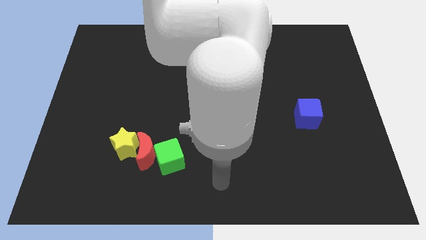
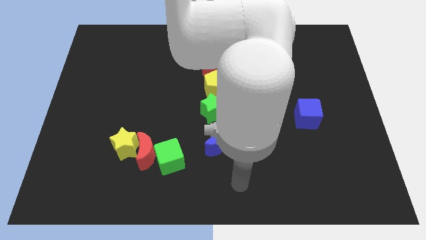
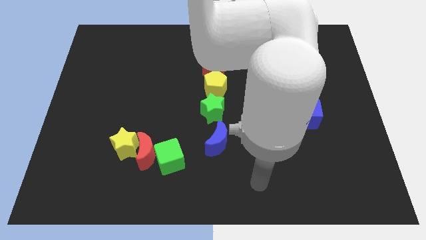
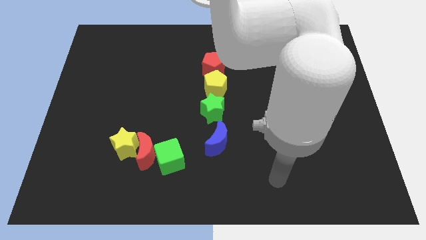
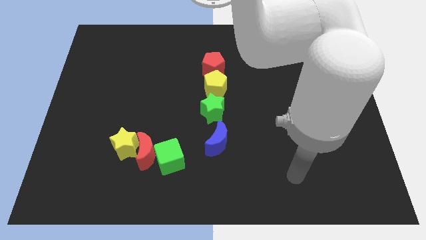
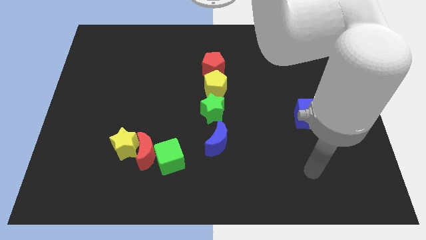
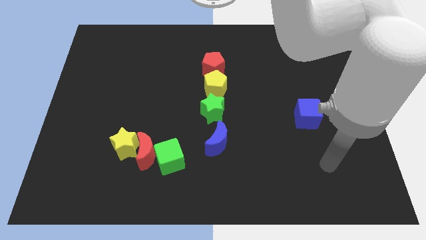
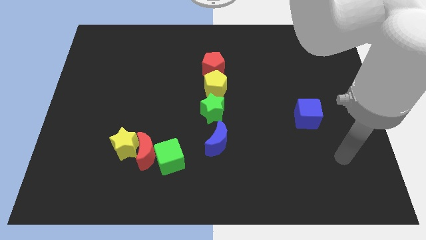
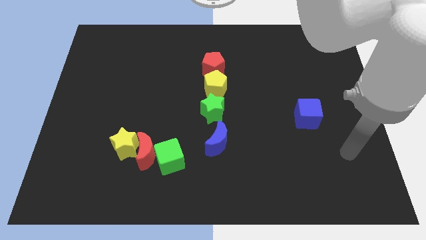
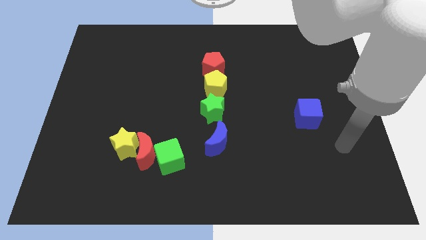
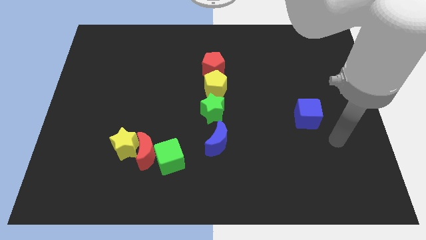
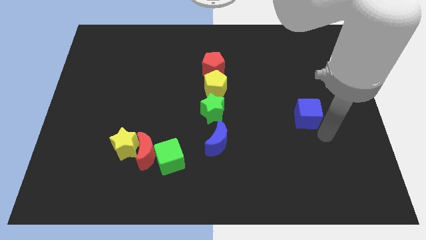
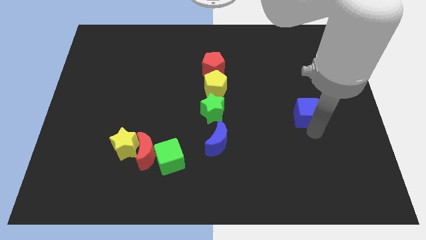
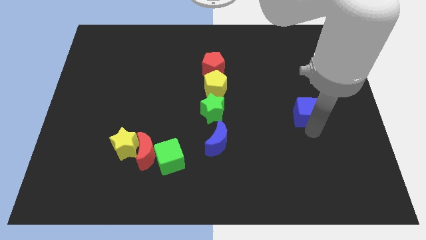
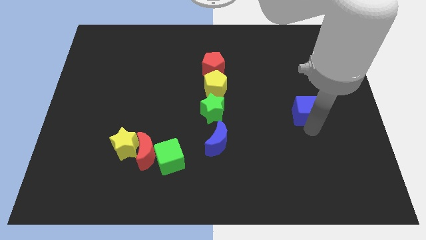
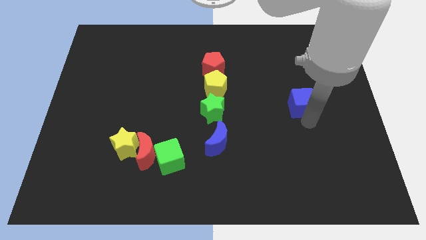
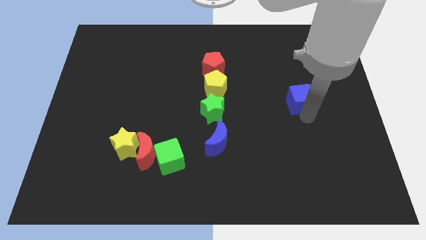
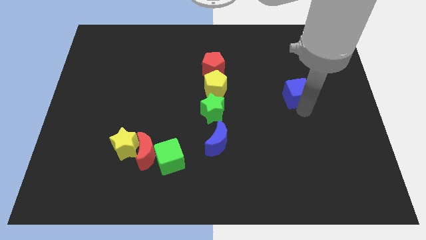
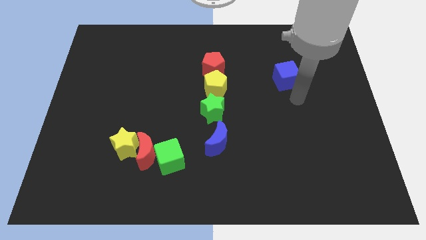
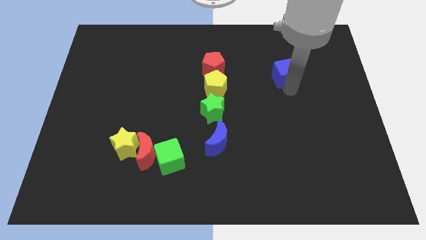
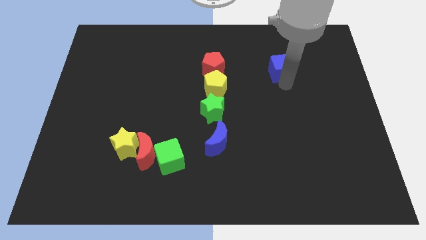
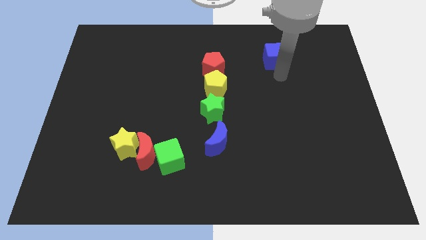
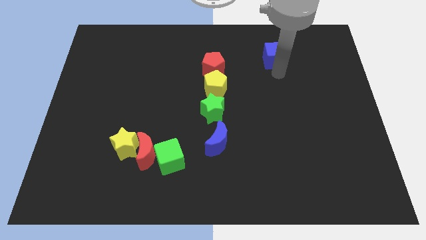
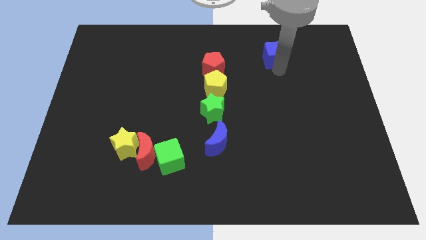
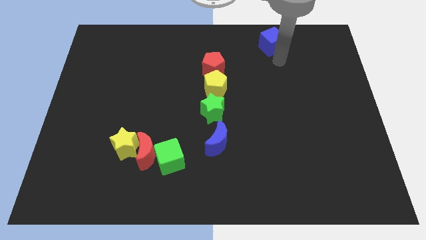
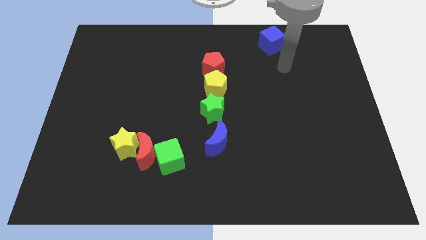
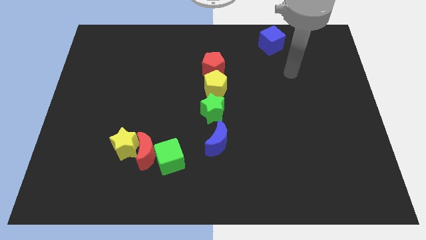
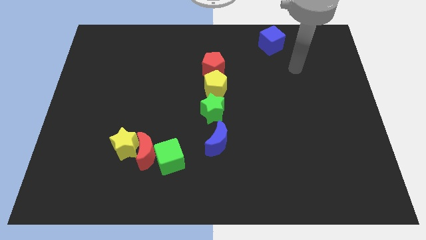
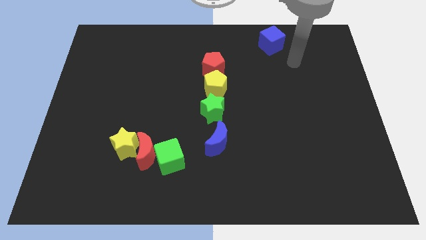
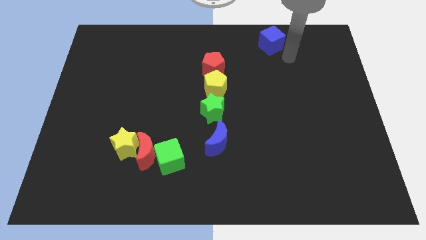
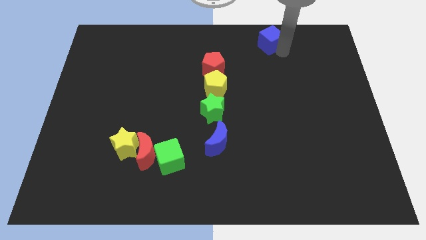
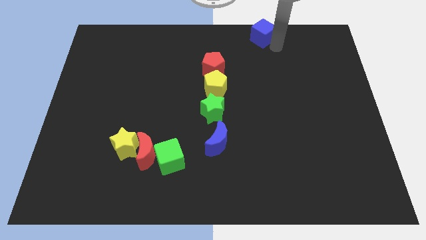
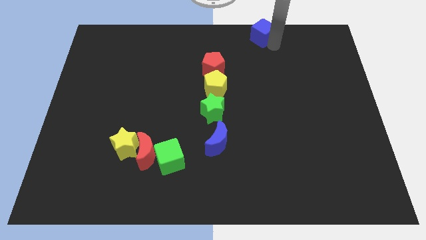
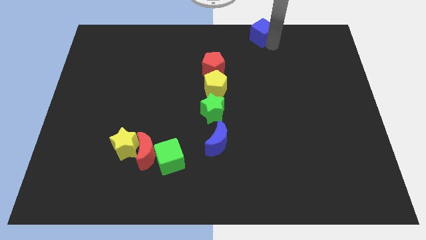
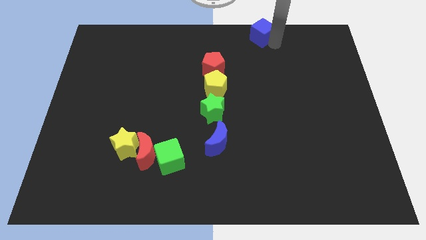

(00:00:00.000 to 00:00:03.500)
place the blue cube to the top center

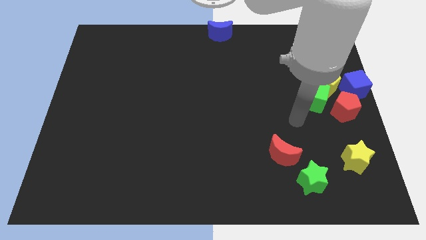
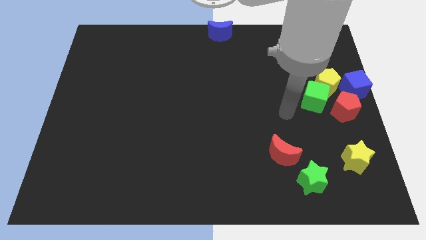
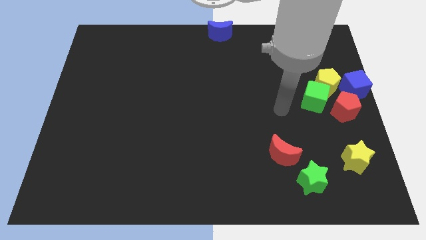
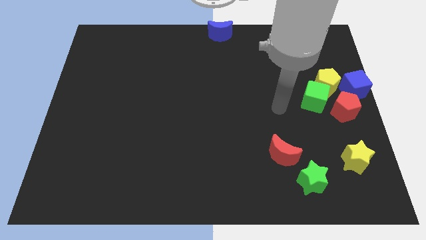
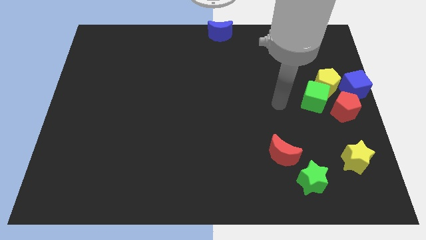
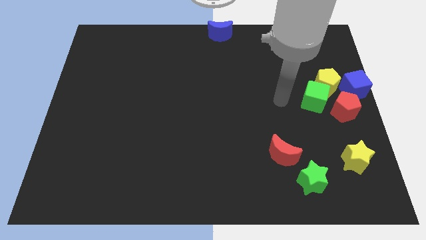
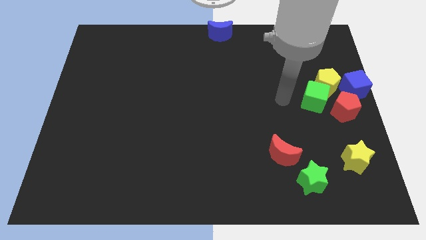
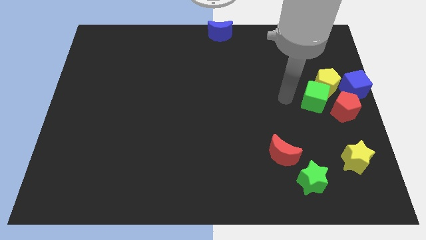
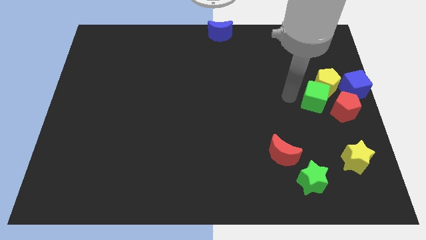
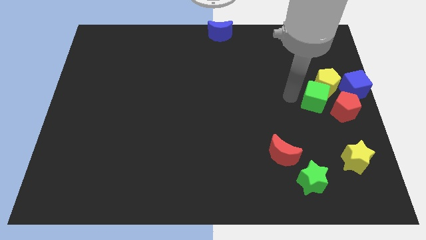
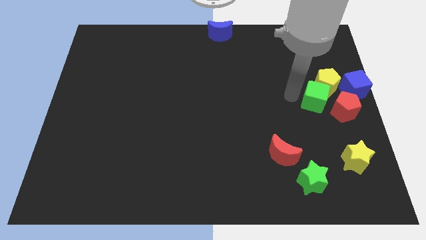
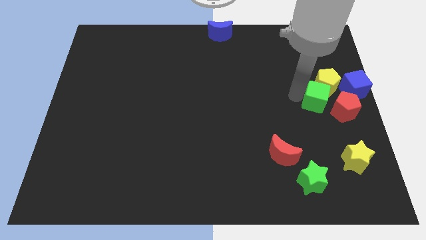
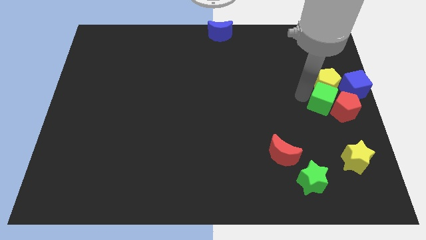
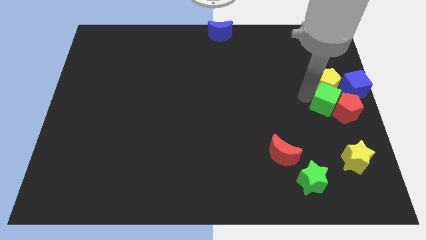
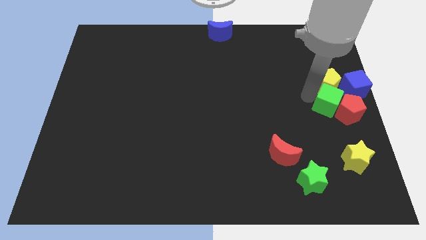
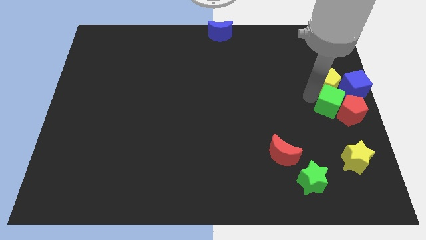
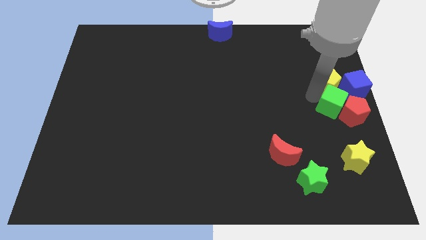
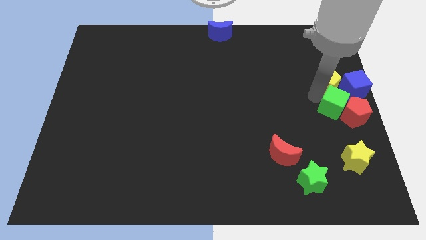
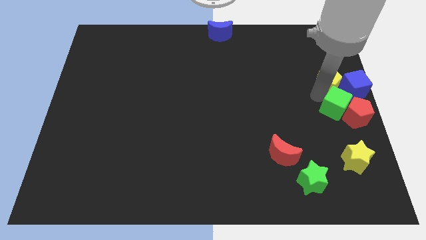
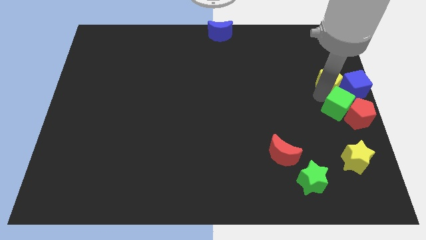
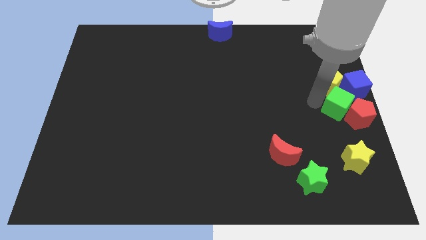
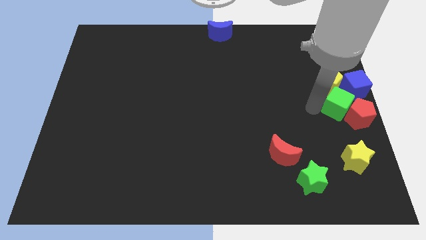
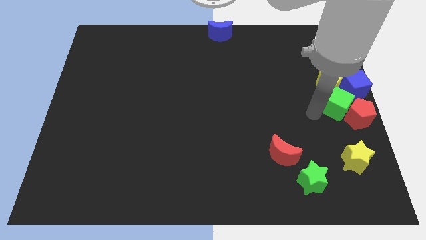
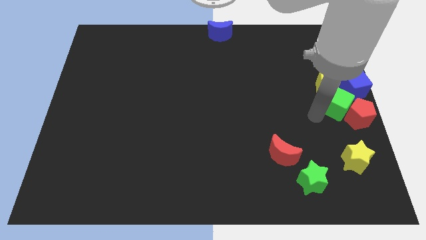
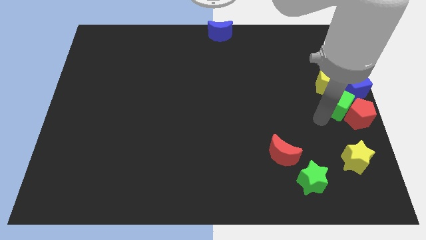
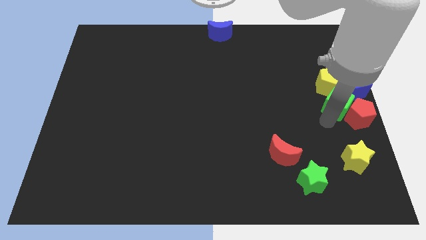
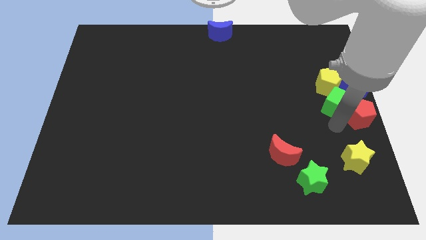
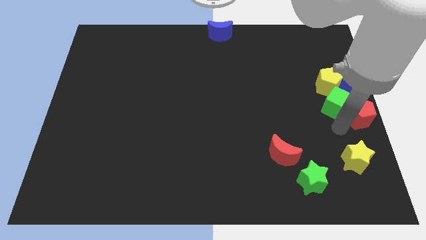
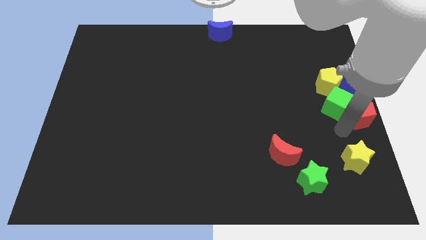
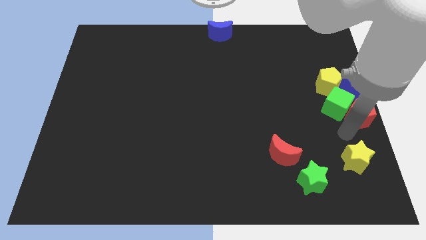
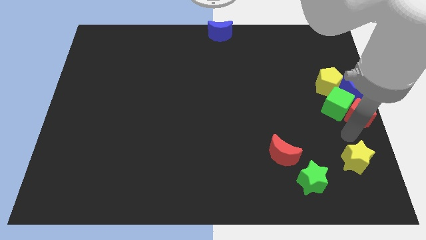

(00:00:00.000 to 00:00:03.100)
move green cube into red pentagon

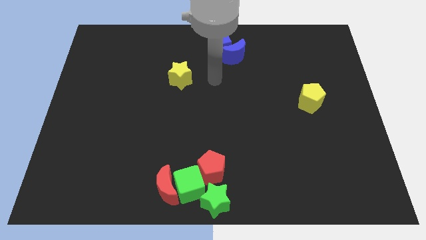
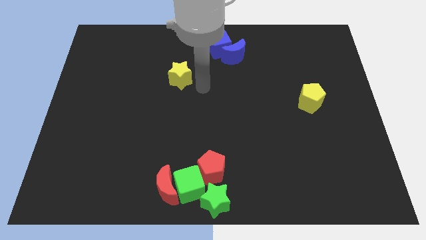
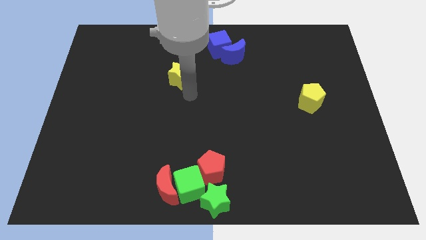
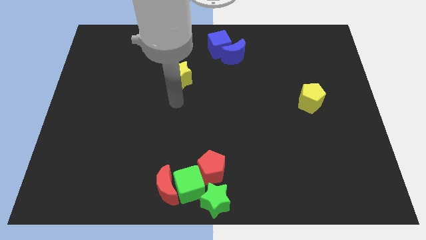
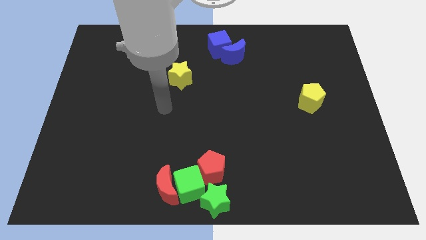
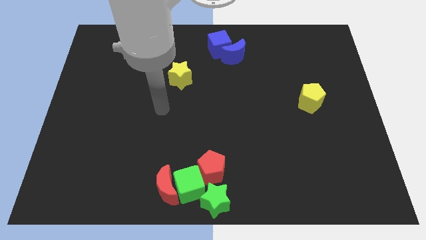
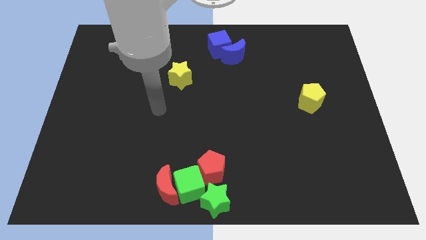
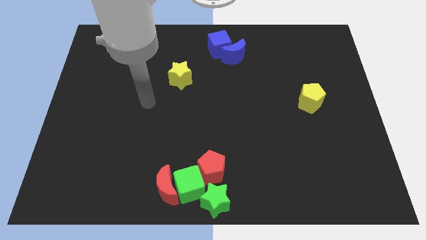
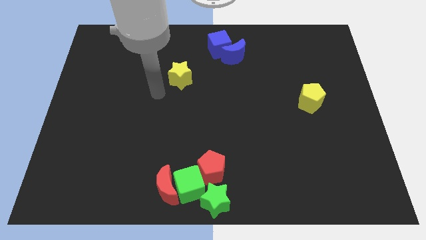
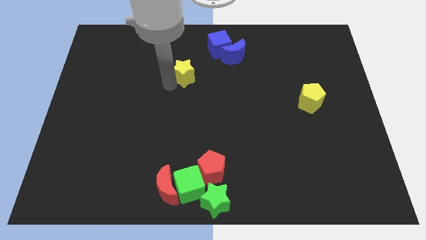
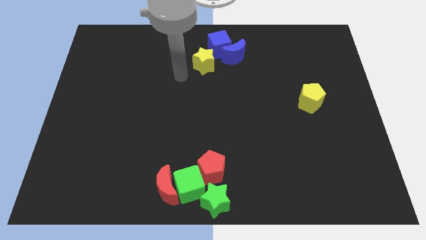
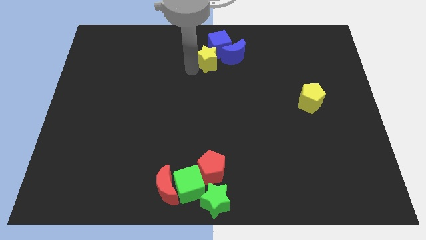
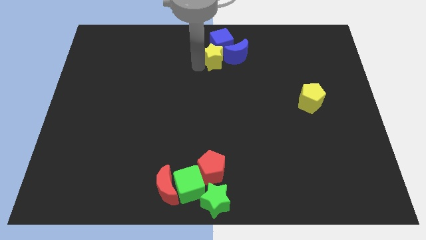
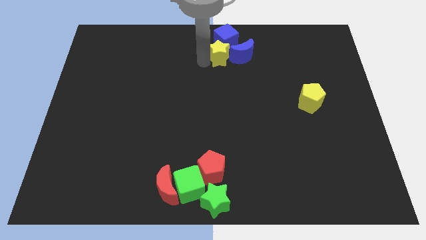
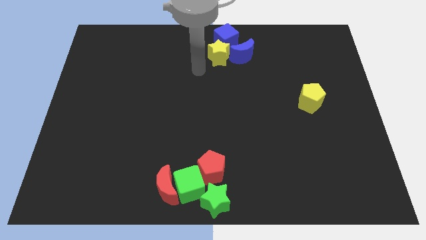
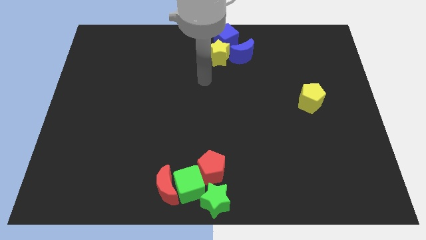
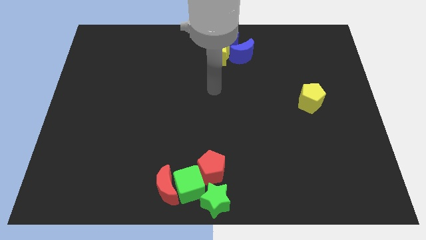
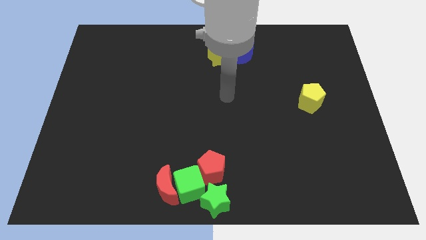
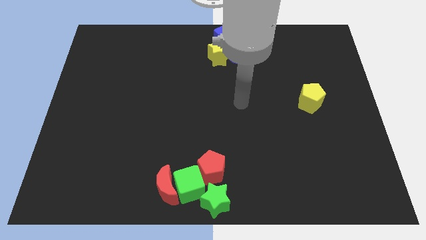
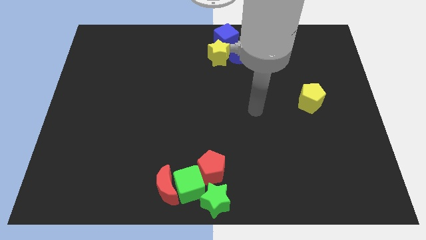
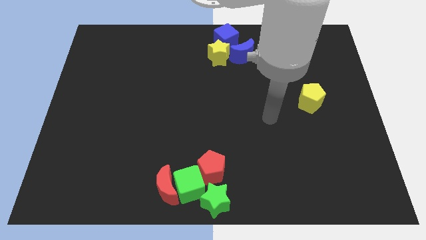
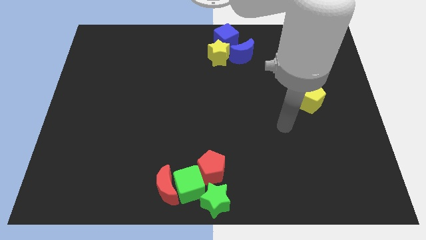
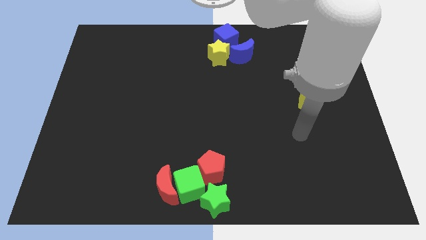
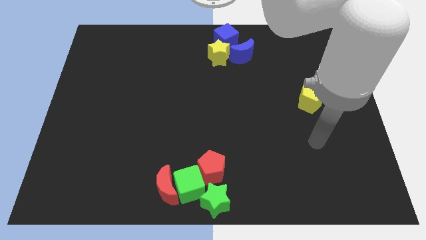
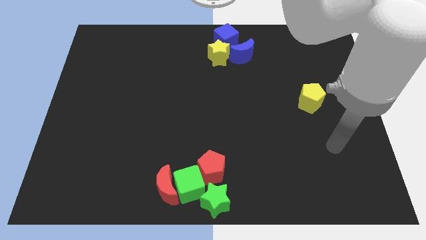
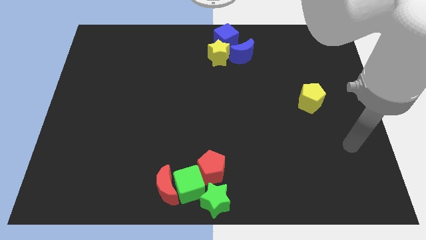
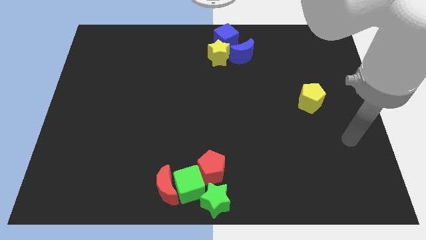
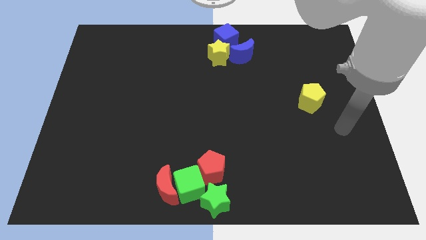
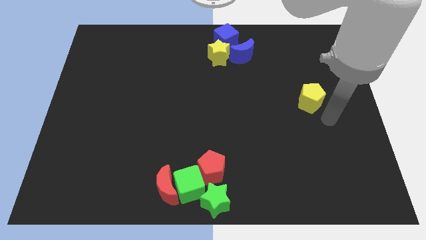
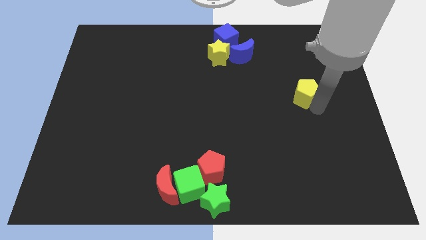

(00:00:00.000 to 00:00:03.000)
push the yellow star into the group of blue blocks
